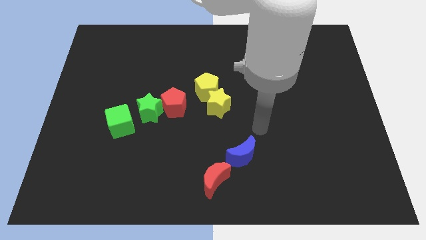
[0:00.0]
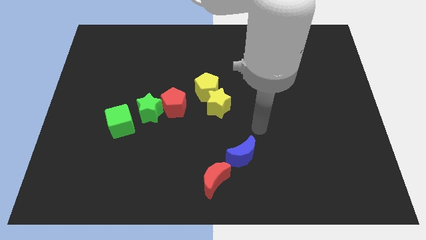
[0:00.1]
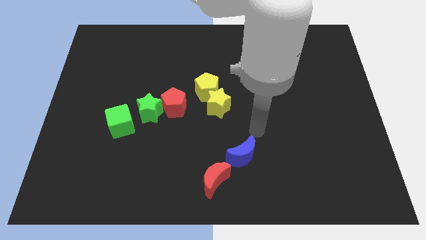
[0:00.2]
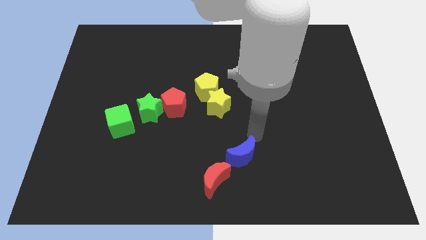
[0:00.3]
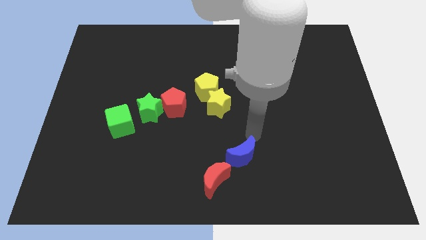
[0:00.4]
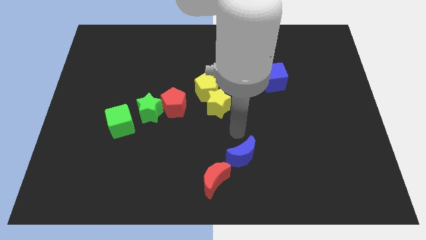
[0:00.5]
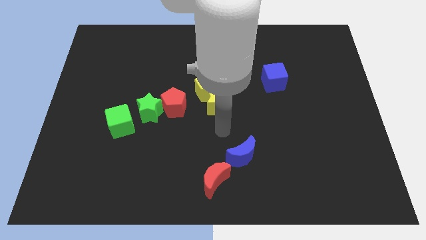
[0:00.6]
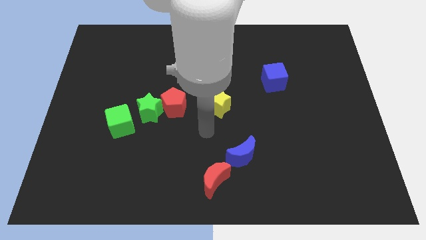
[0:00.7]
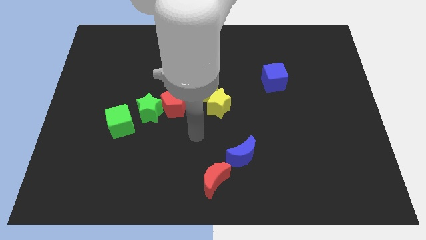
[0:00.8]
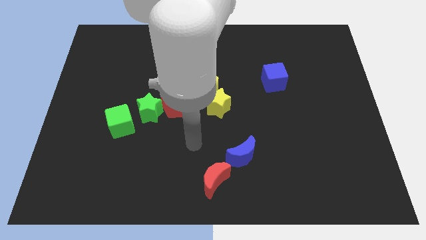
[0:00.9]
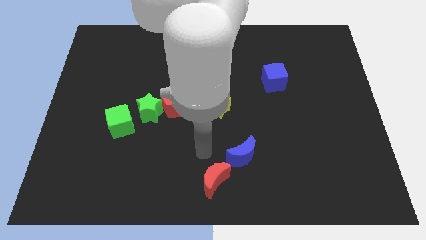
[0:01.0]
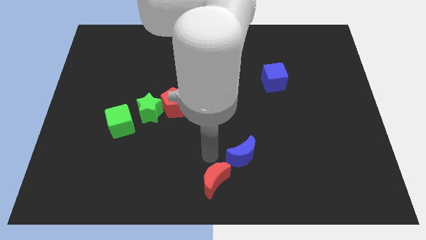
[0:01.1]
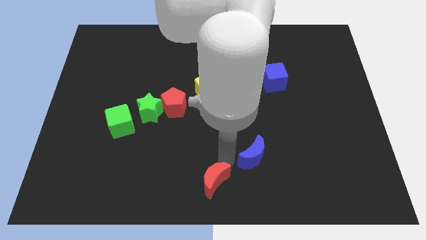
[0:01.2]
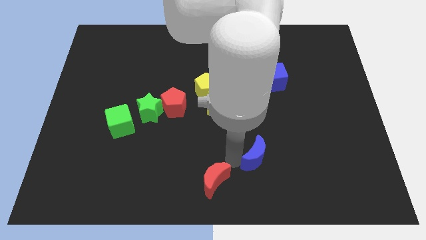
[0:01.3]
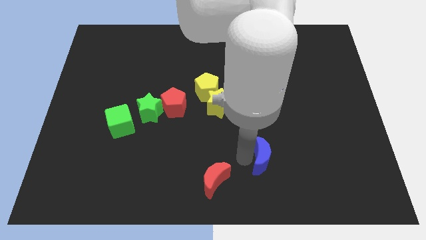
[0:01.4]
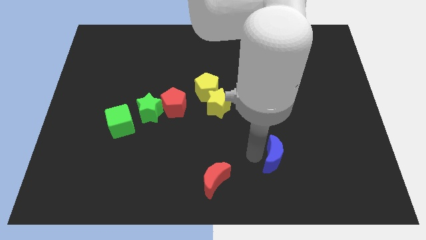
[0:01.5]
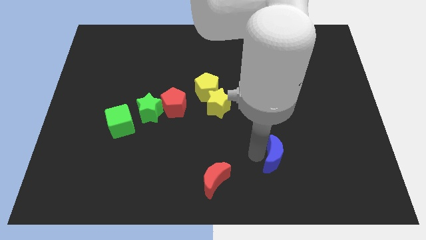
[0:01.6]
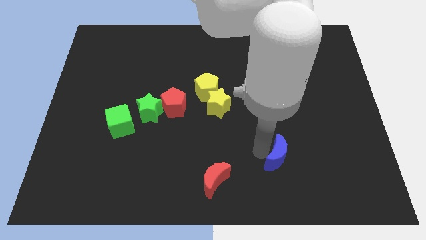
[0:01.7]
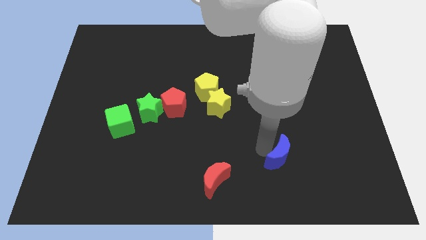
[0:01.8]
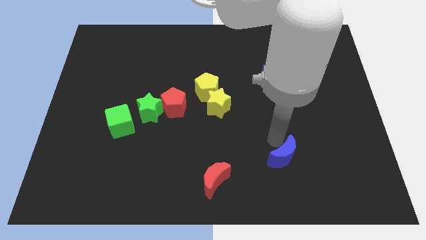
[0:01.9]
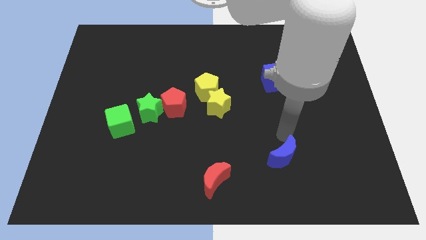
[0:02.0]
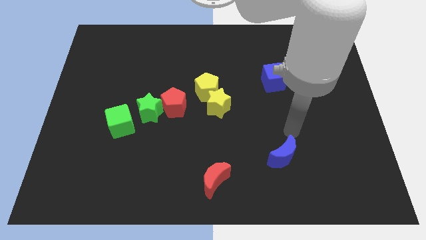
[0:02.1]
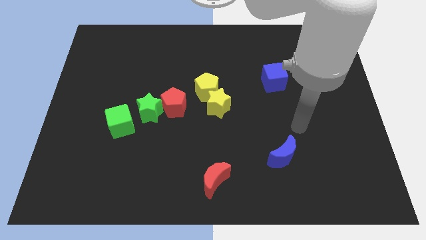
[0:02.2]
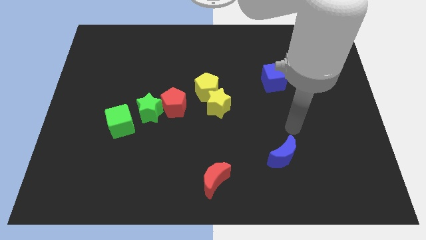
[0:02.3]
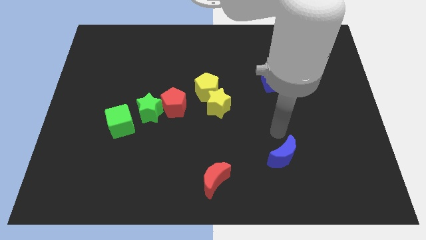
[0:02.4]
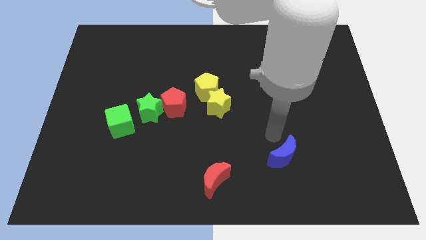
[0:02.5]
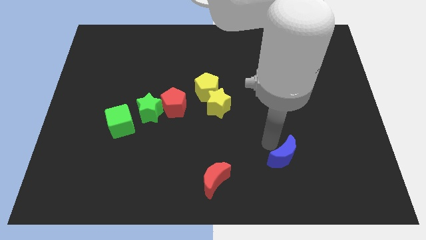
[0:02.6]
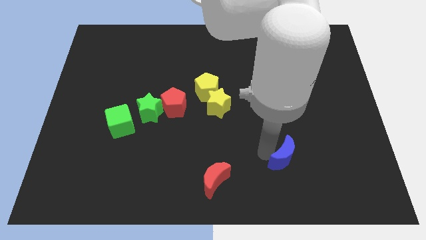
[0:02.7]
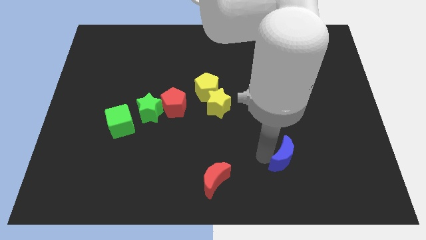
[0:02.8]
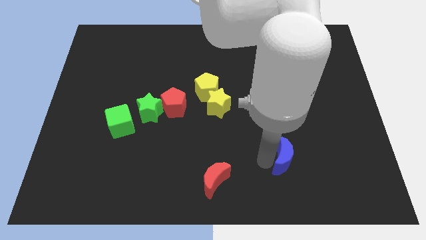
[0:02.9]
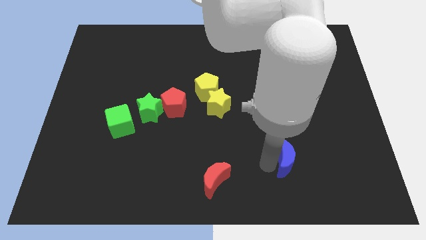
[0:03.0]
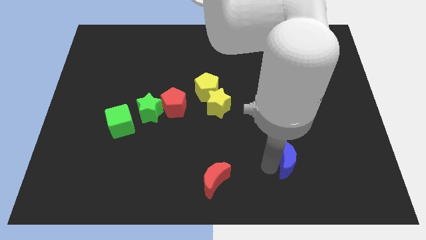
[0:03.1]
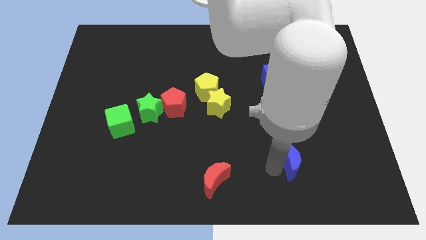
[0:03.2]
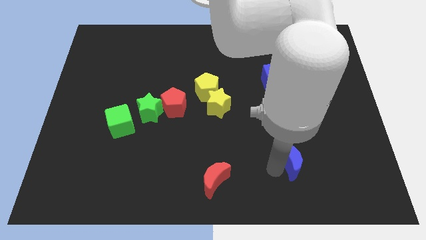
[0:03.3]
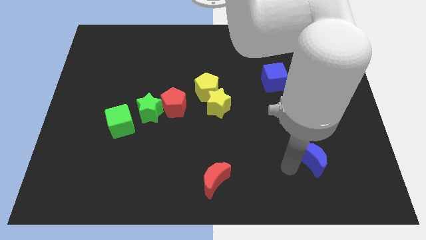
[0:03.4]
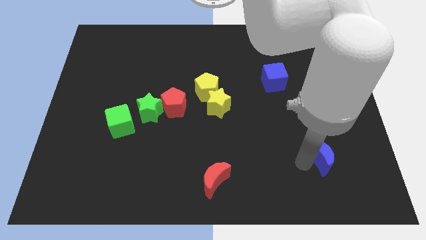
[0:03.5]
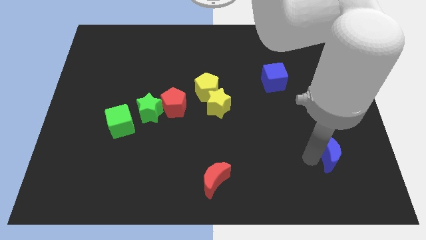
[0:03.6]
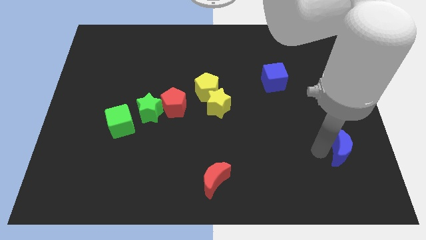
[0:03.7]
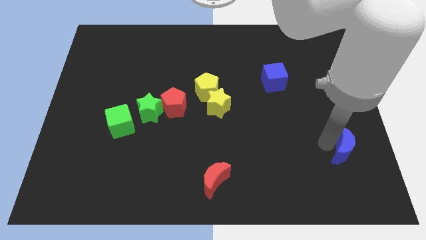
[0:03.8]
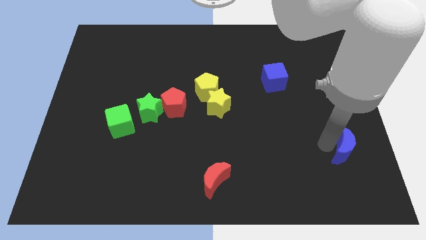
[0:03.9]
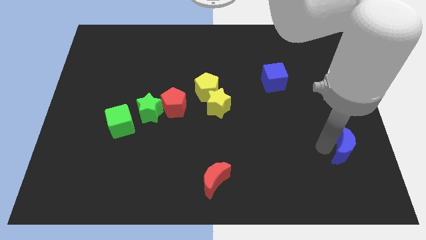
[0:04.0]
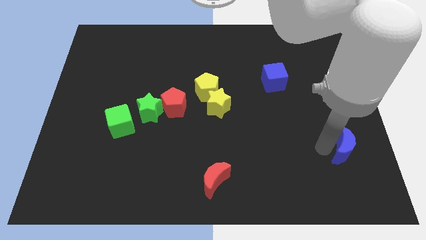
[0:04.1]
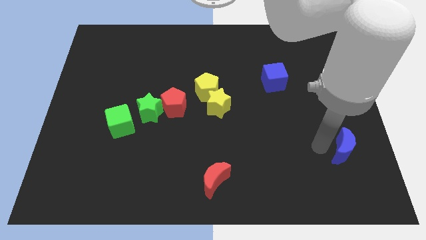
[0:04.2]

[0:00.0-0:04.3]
push the blue moon towards the right side of the board

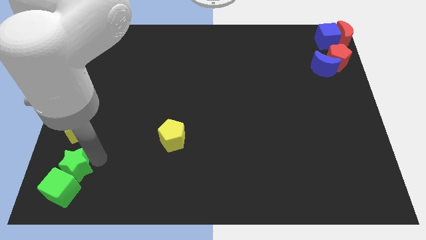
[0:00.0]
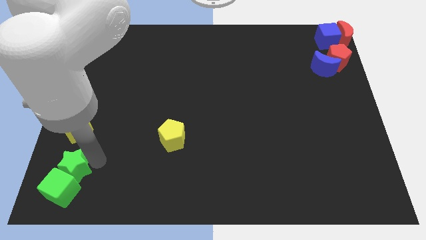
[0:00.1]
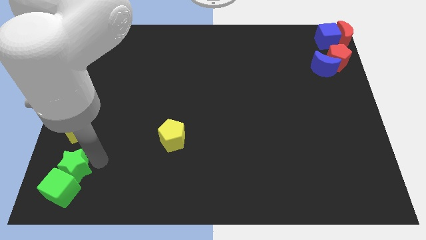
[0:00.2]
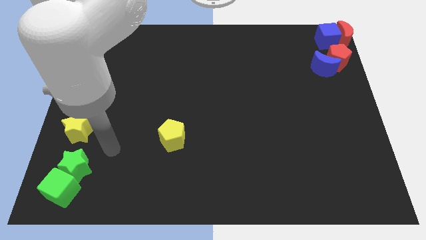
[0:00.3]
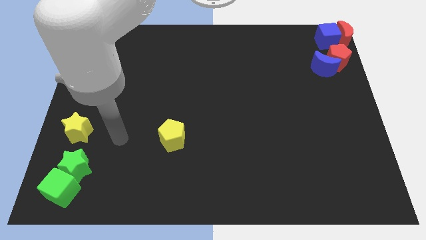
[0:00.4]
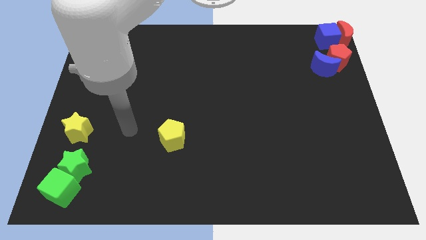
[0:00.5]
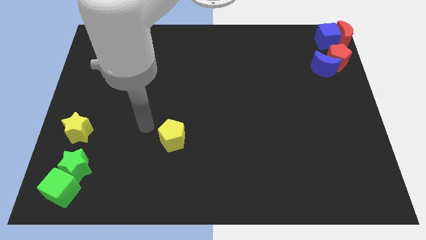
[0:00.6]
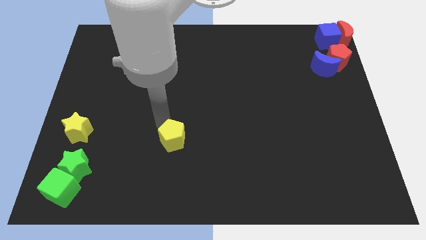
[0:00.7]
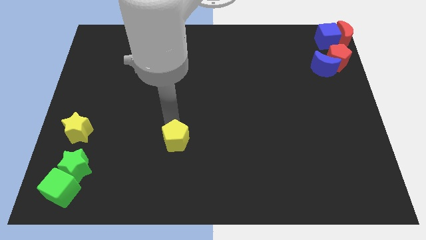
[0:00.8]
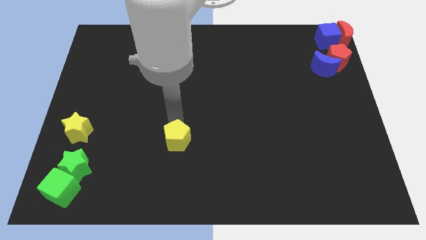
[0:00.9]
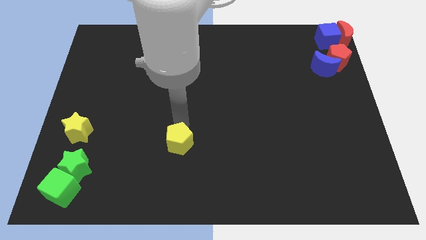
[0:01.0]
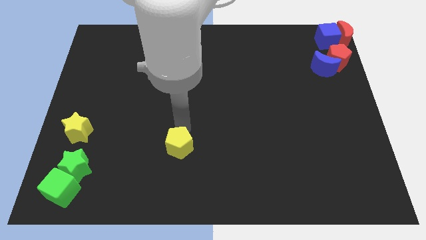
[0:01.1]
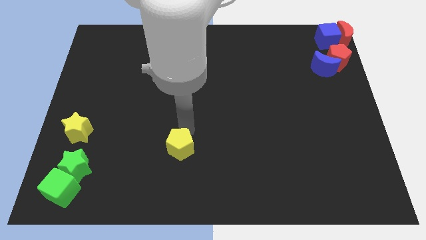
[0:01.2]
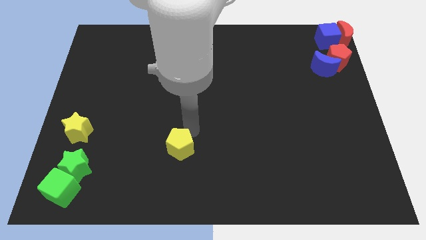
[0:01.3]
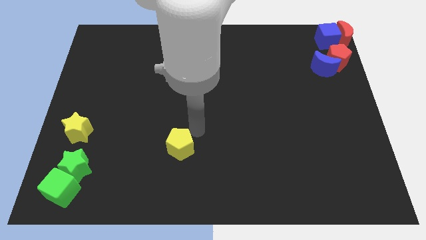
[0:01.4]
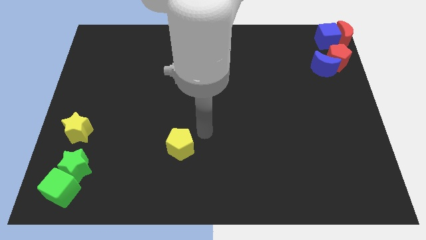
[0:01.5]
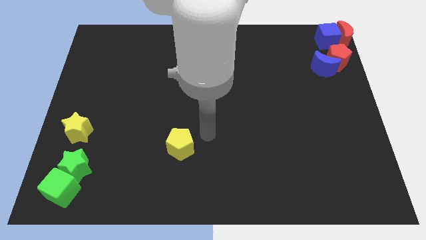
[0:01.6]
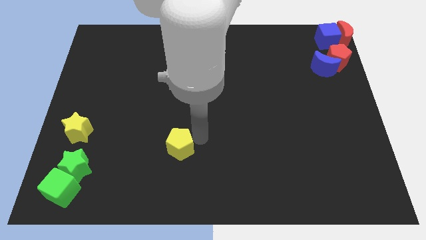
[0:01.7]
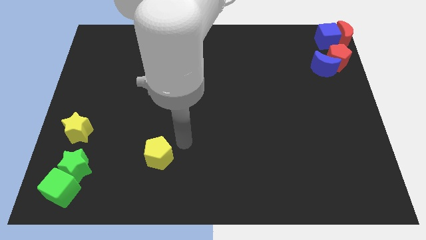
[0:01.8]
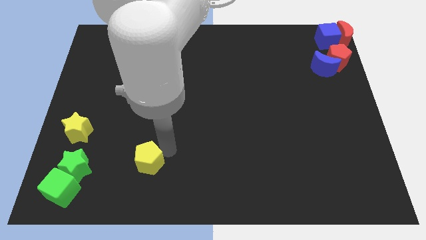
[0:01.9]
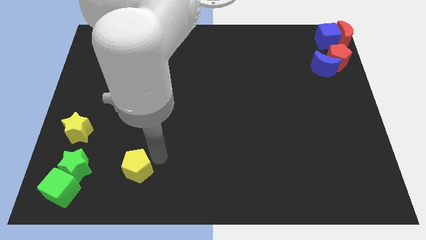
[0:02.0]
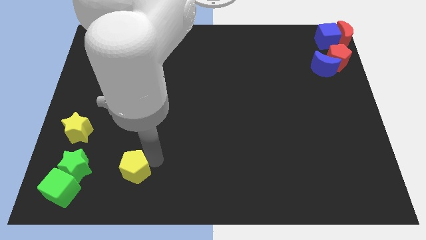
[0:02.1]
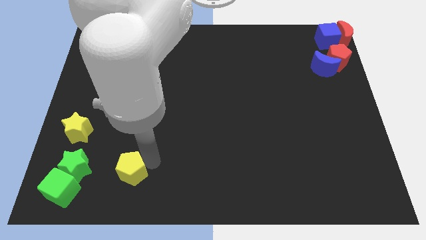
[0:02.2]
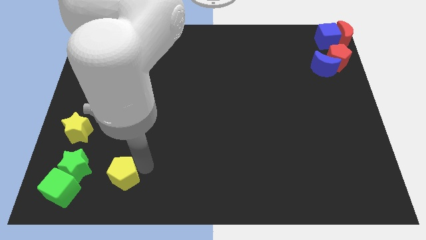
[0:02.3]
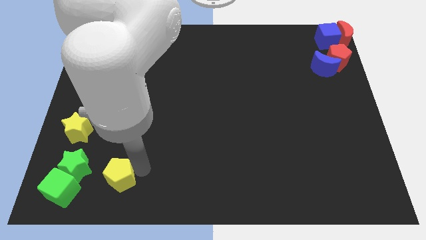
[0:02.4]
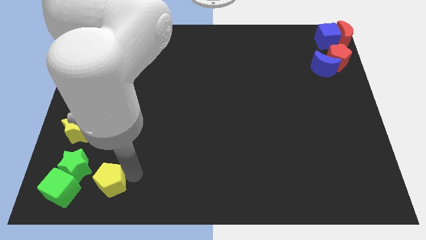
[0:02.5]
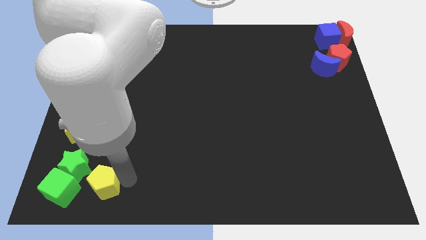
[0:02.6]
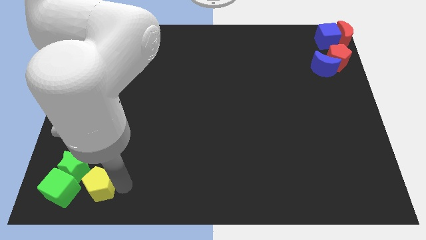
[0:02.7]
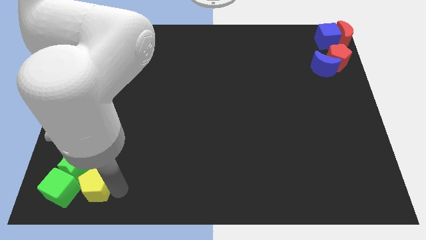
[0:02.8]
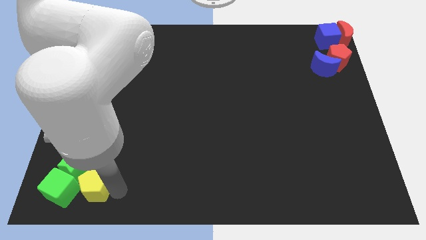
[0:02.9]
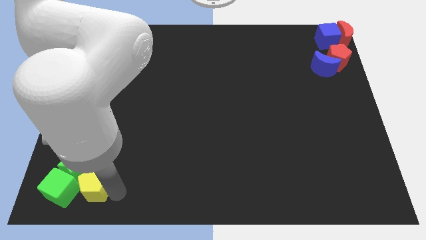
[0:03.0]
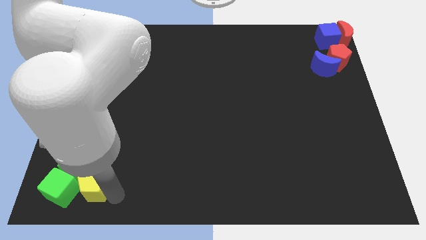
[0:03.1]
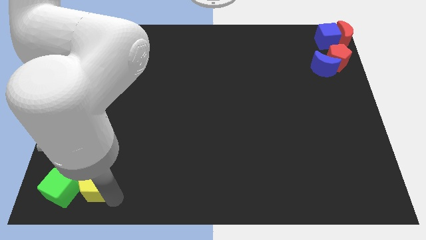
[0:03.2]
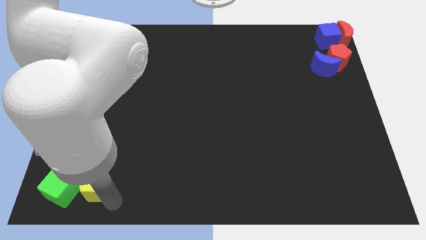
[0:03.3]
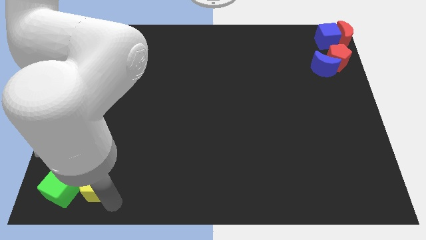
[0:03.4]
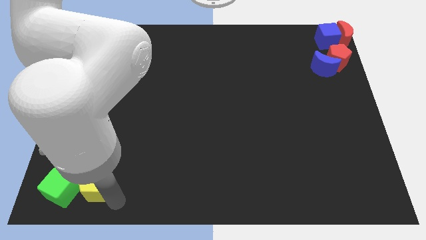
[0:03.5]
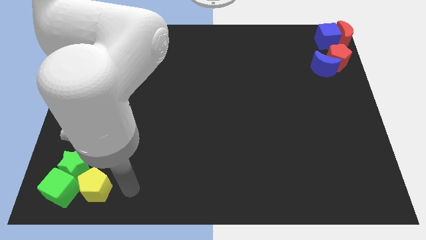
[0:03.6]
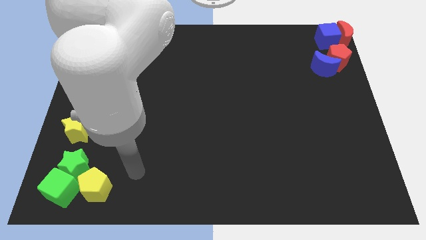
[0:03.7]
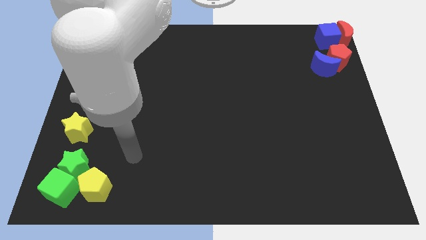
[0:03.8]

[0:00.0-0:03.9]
adjust the yellow pentagon on the right side of the green cube

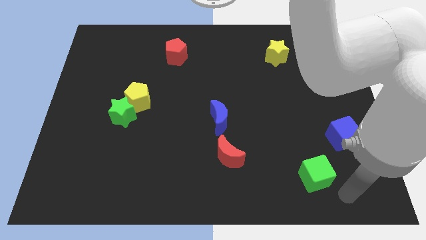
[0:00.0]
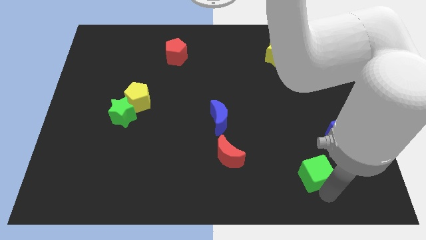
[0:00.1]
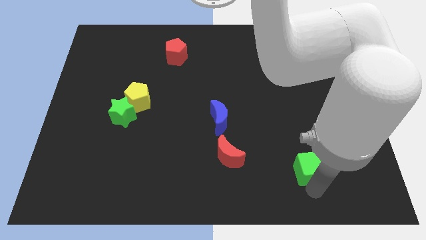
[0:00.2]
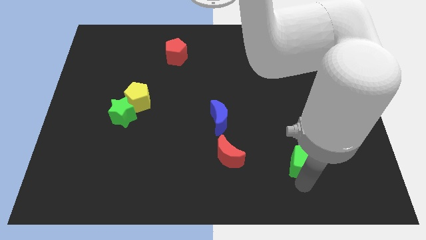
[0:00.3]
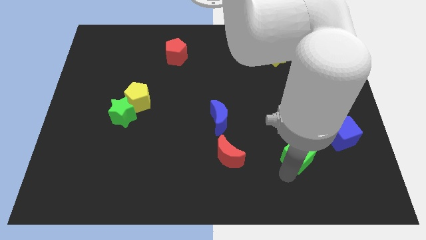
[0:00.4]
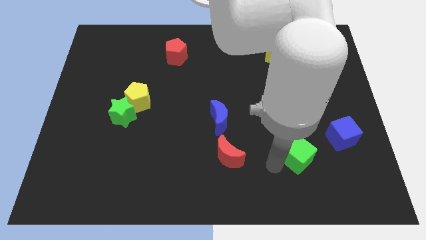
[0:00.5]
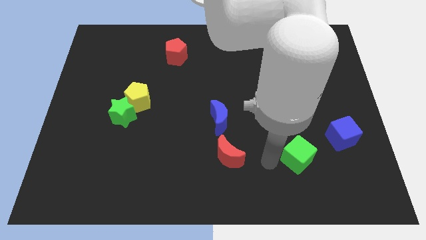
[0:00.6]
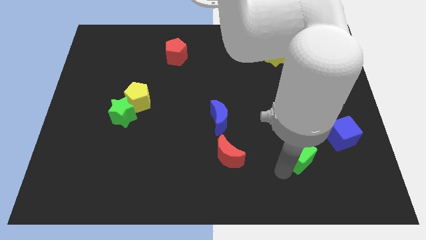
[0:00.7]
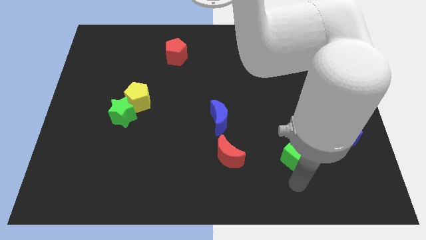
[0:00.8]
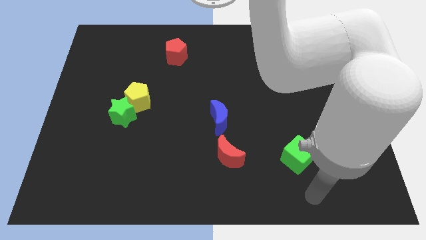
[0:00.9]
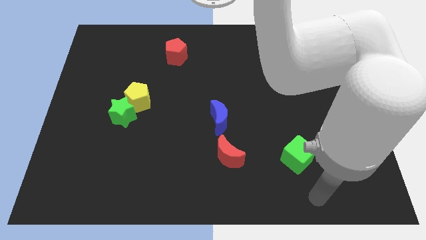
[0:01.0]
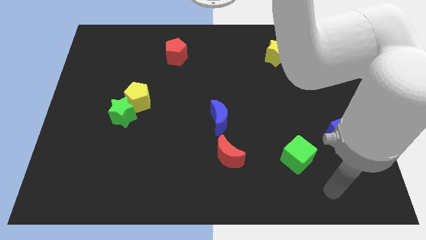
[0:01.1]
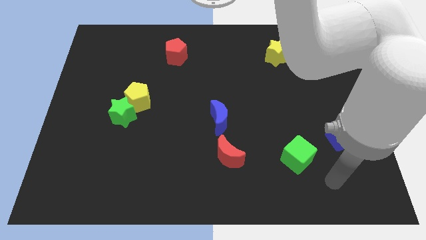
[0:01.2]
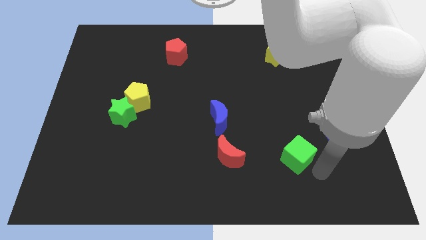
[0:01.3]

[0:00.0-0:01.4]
place the green cube parallel to the right of the red moon
